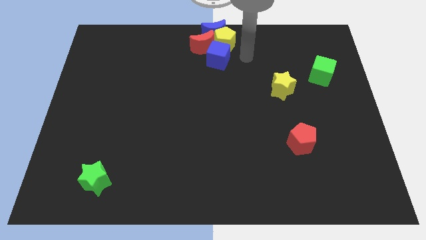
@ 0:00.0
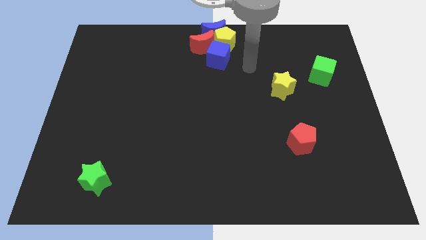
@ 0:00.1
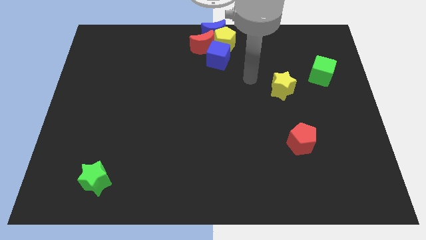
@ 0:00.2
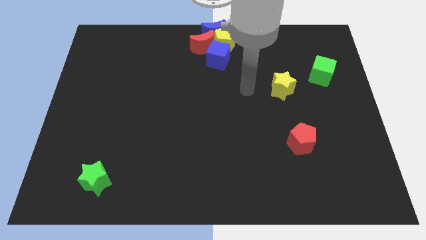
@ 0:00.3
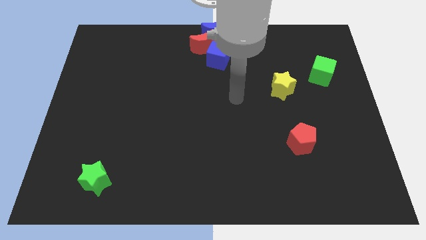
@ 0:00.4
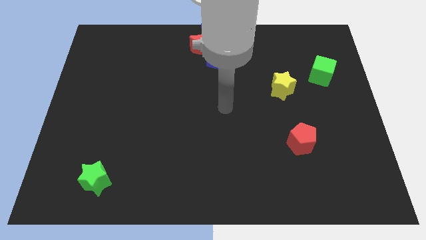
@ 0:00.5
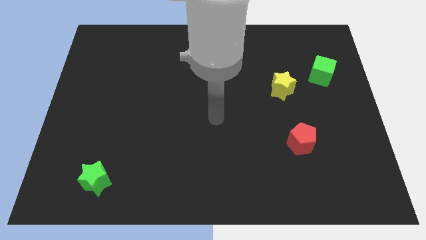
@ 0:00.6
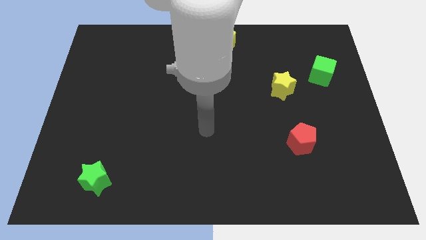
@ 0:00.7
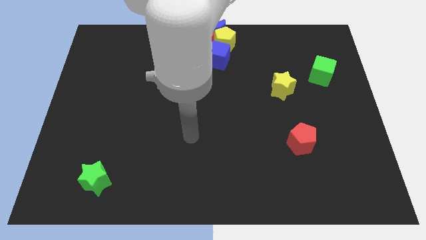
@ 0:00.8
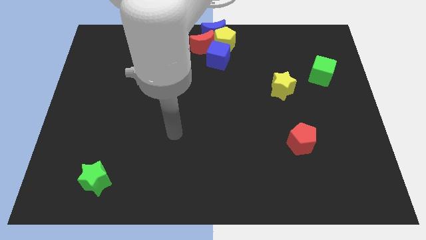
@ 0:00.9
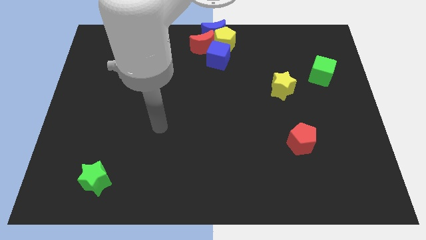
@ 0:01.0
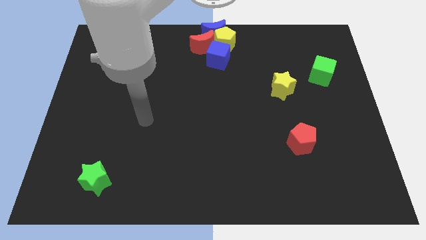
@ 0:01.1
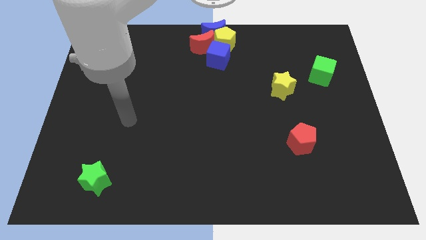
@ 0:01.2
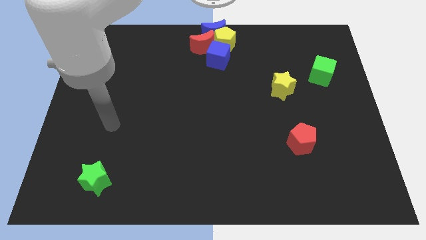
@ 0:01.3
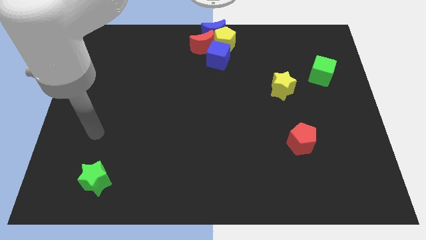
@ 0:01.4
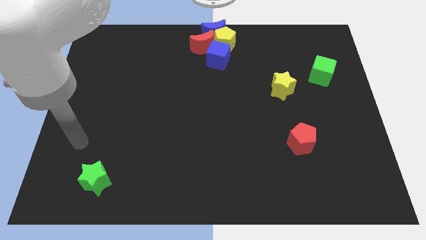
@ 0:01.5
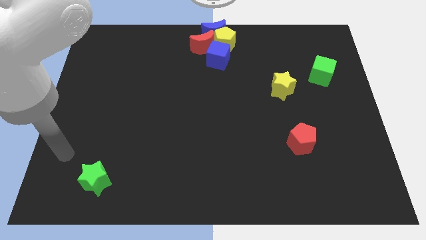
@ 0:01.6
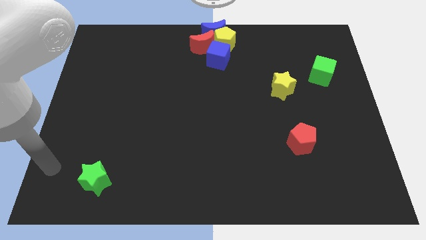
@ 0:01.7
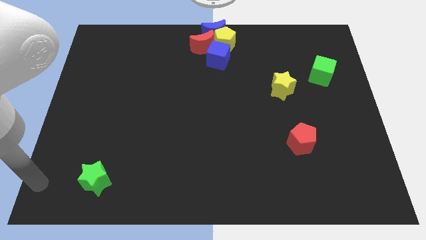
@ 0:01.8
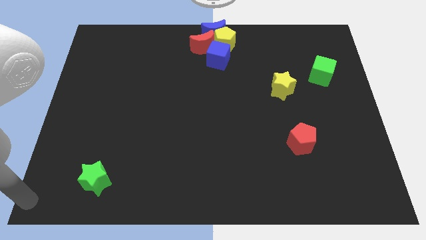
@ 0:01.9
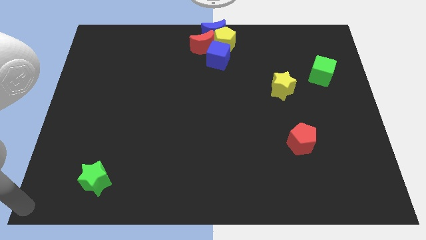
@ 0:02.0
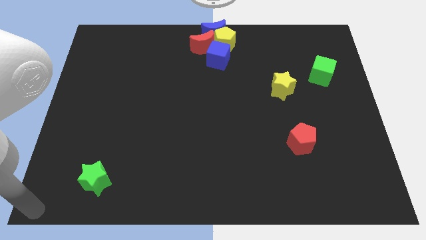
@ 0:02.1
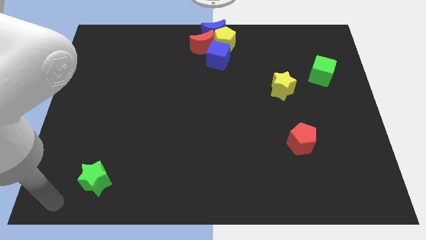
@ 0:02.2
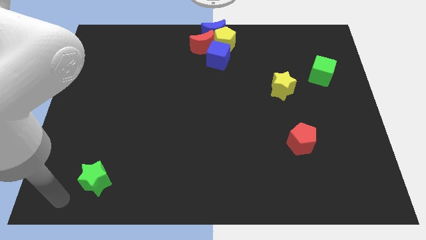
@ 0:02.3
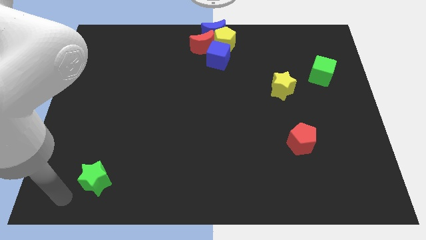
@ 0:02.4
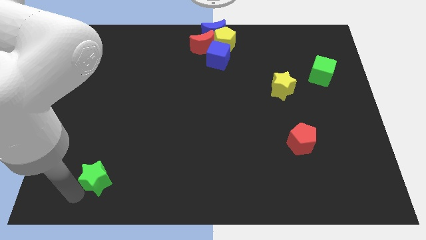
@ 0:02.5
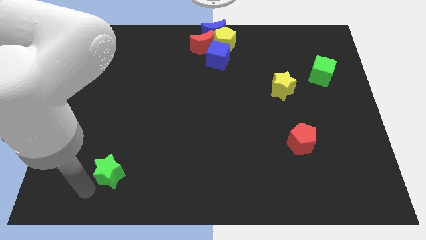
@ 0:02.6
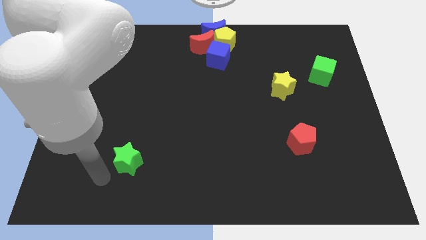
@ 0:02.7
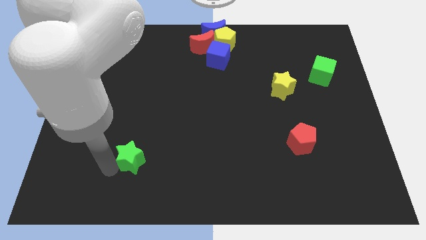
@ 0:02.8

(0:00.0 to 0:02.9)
slide the green star up slightly

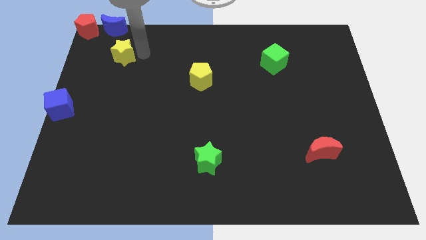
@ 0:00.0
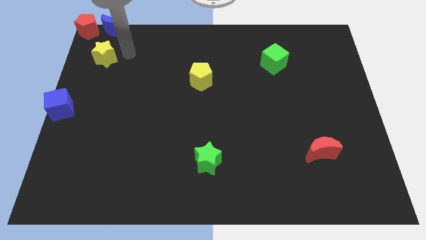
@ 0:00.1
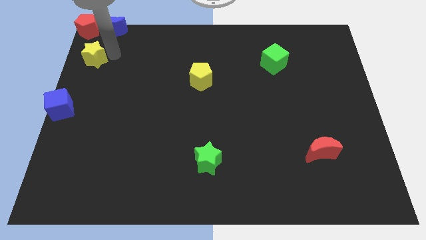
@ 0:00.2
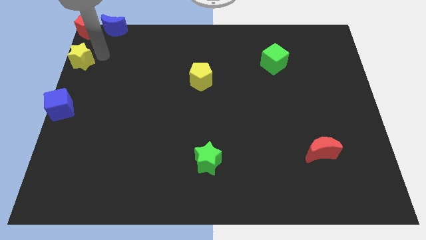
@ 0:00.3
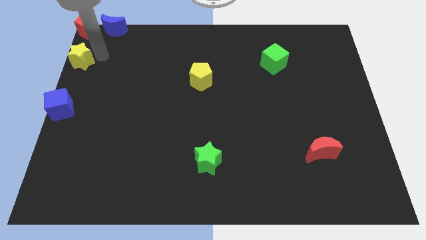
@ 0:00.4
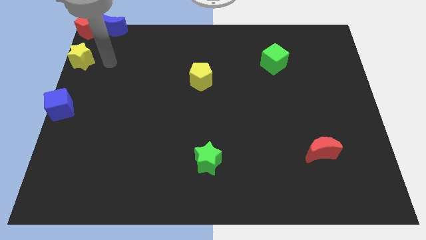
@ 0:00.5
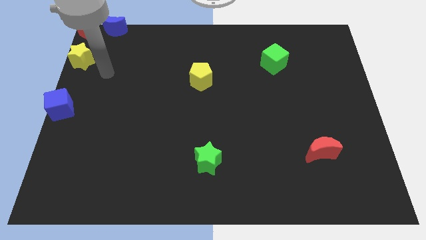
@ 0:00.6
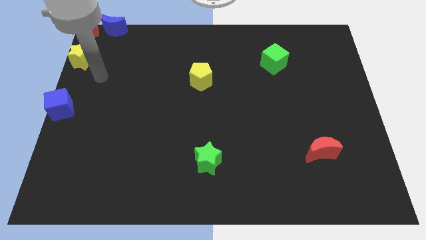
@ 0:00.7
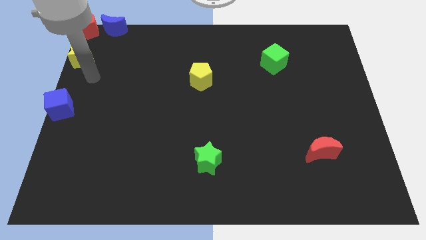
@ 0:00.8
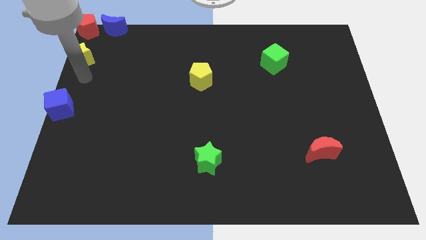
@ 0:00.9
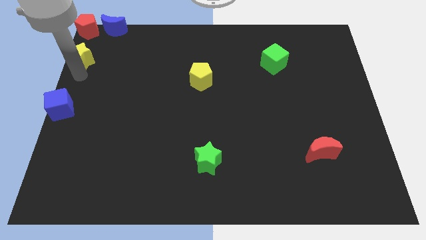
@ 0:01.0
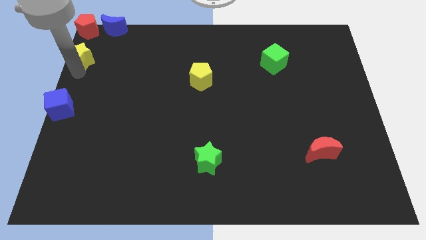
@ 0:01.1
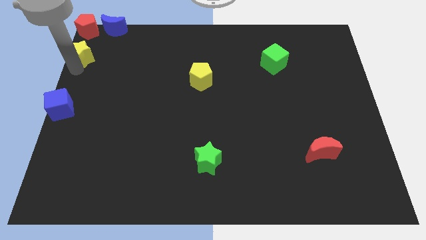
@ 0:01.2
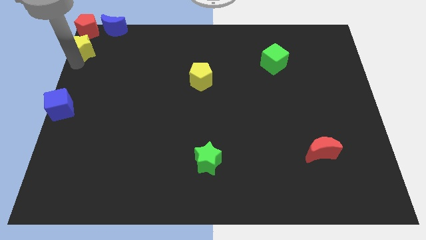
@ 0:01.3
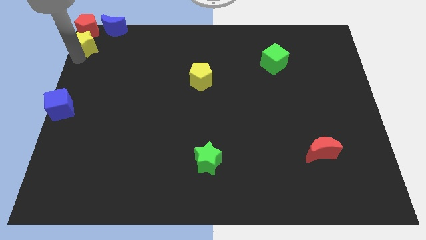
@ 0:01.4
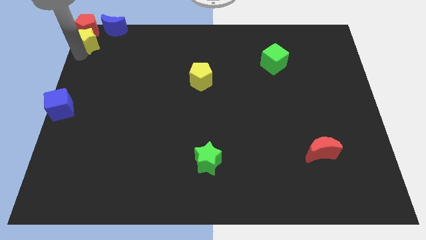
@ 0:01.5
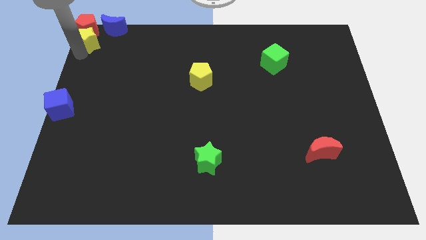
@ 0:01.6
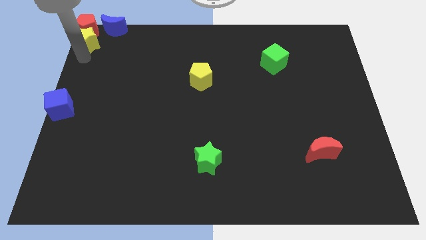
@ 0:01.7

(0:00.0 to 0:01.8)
push the yellow star towards the bottom of the red pentagon

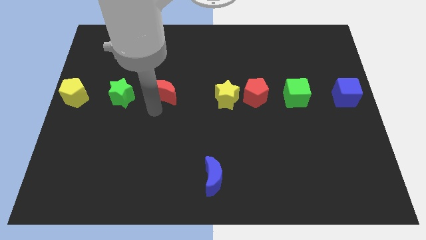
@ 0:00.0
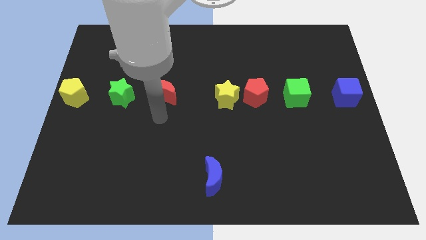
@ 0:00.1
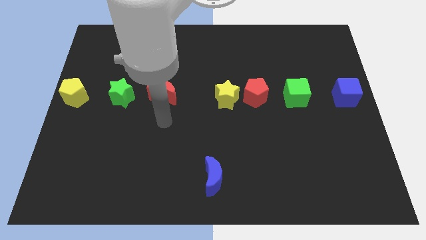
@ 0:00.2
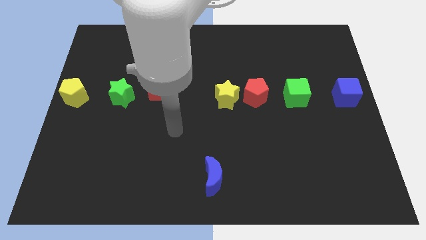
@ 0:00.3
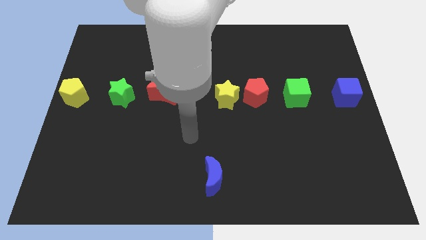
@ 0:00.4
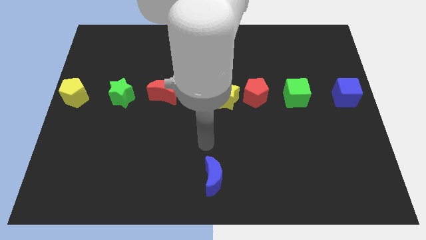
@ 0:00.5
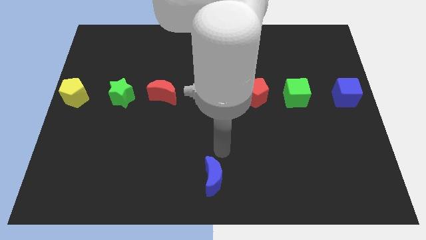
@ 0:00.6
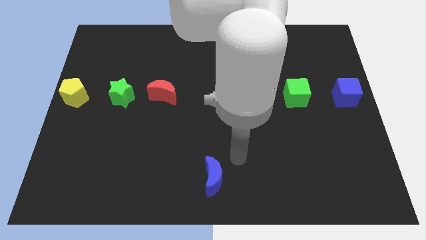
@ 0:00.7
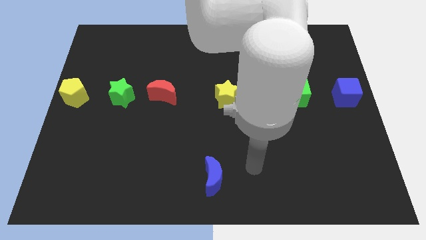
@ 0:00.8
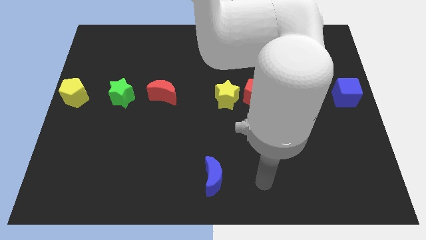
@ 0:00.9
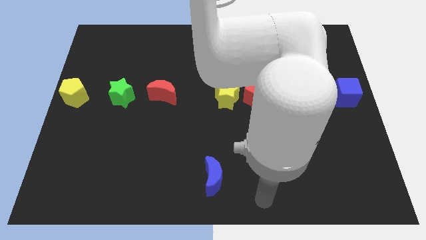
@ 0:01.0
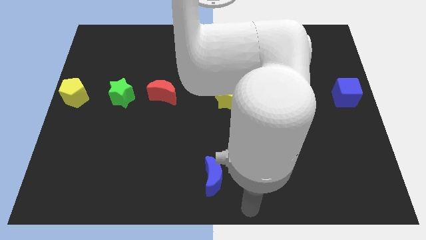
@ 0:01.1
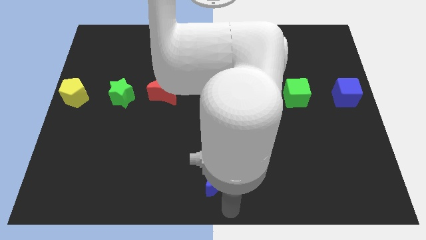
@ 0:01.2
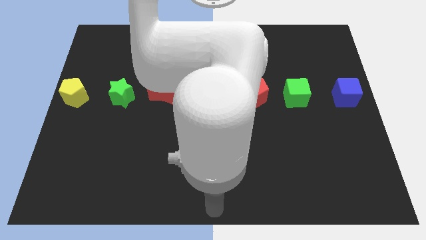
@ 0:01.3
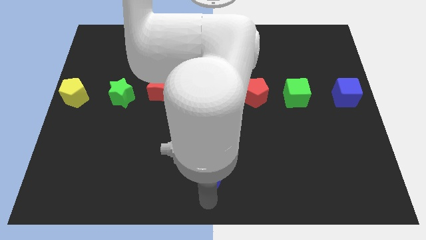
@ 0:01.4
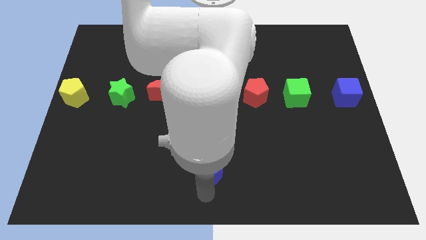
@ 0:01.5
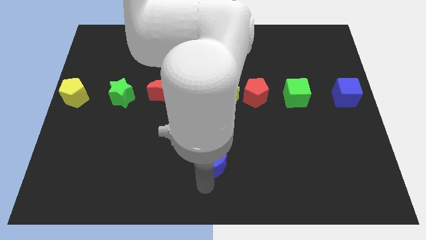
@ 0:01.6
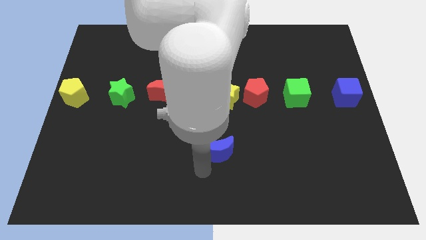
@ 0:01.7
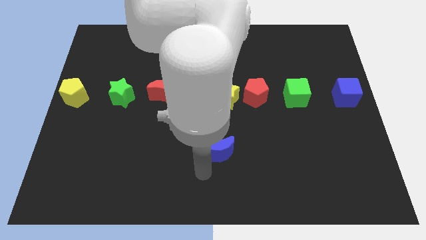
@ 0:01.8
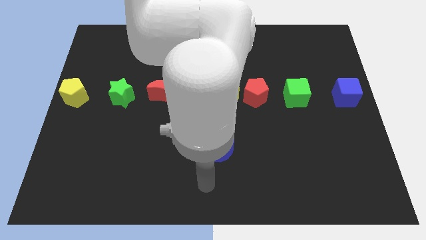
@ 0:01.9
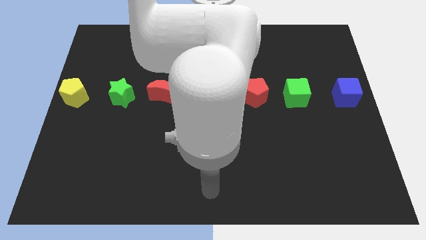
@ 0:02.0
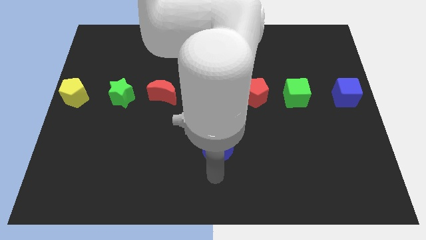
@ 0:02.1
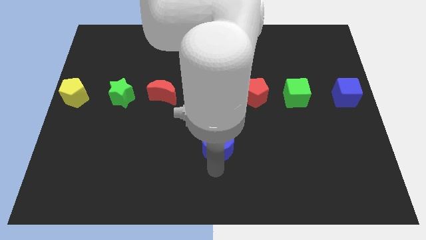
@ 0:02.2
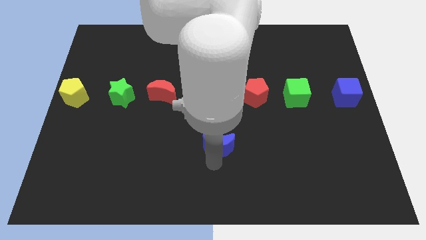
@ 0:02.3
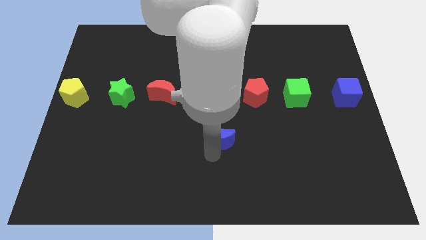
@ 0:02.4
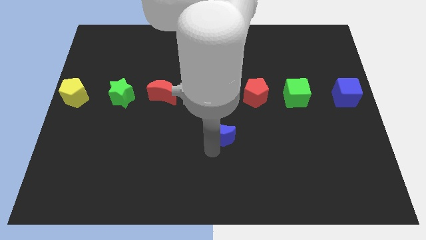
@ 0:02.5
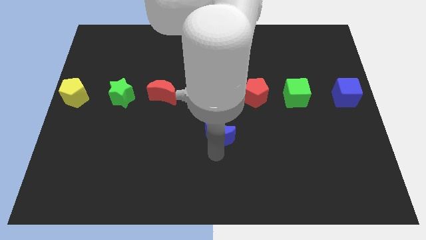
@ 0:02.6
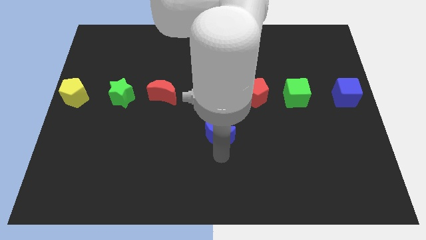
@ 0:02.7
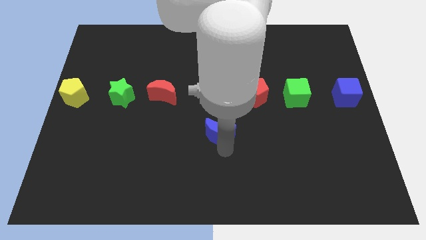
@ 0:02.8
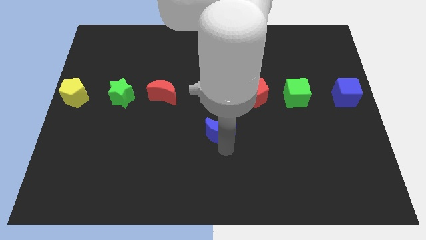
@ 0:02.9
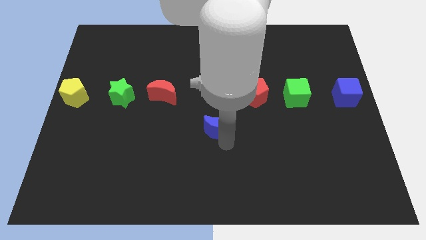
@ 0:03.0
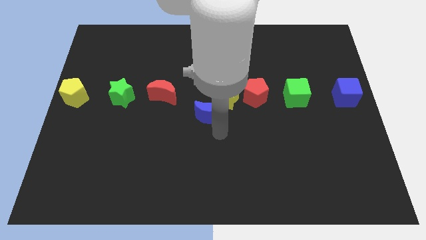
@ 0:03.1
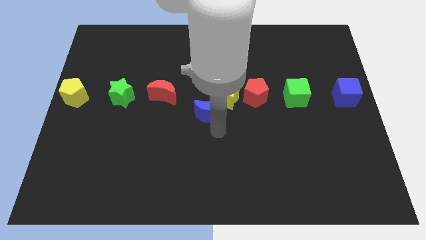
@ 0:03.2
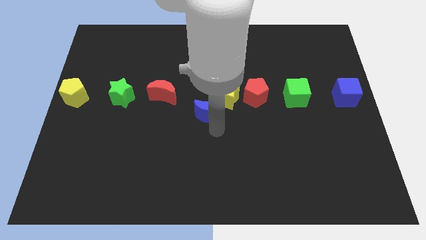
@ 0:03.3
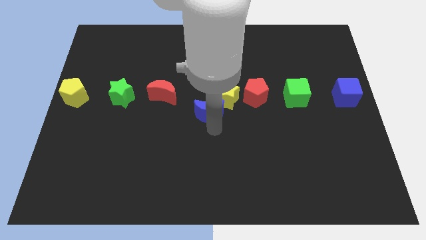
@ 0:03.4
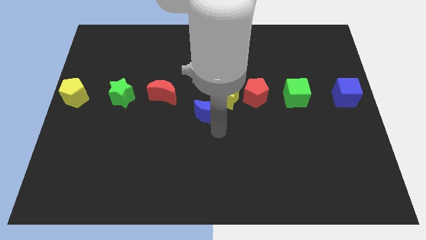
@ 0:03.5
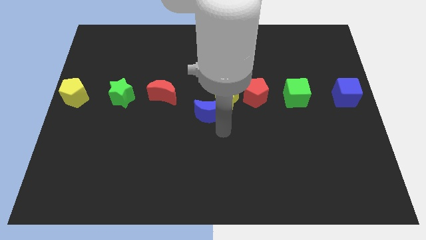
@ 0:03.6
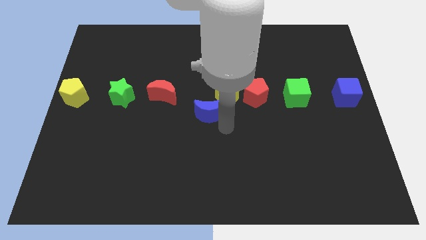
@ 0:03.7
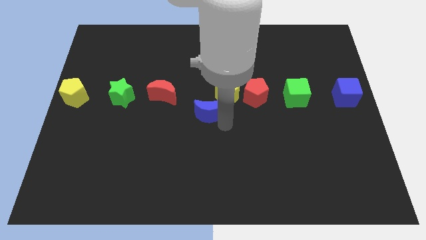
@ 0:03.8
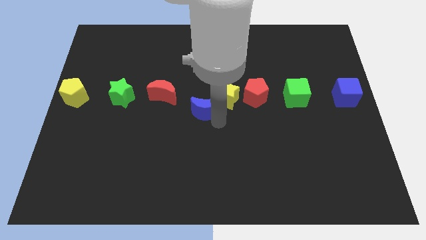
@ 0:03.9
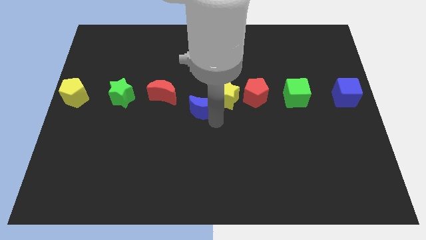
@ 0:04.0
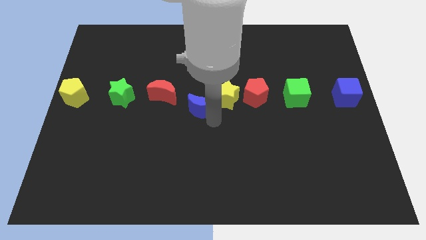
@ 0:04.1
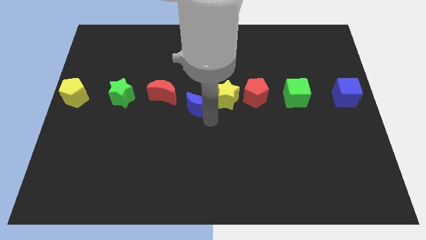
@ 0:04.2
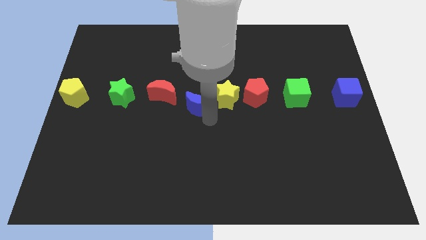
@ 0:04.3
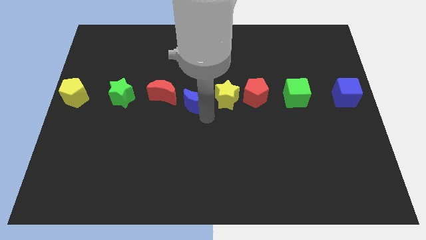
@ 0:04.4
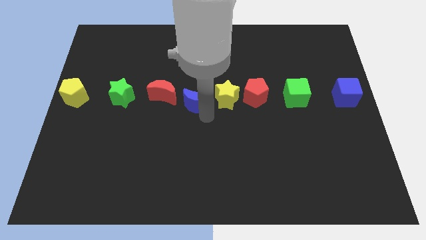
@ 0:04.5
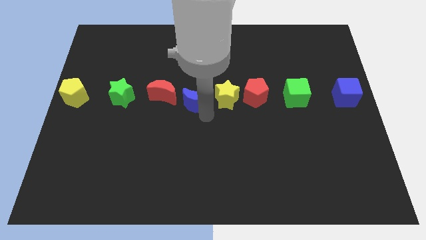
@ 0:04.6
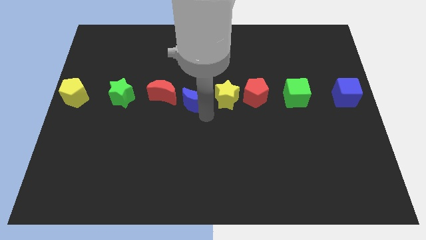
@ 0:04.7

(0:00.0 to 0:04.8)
push the blue moon towards the top
